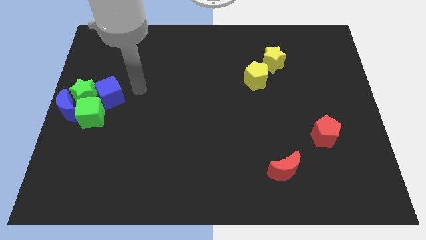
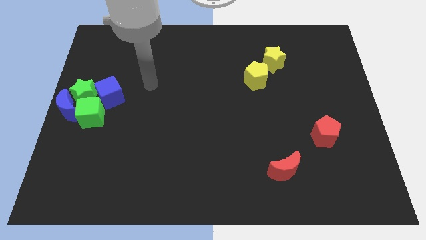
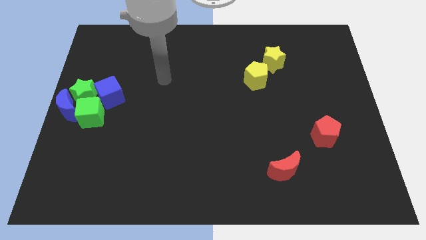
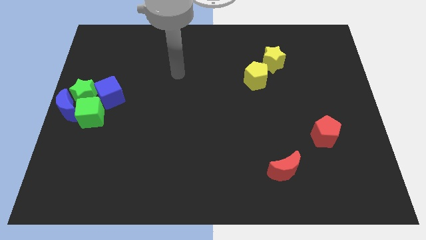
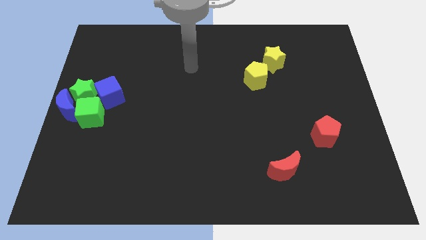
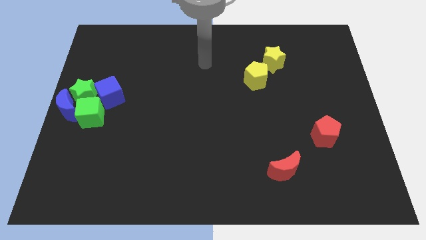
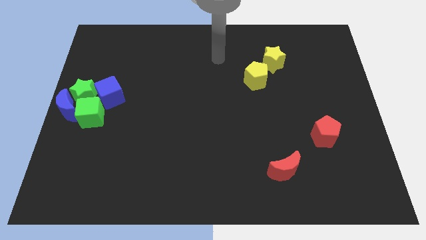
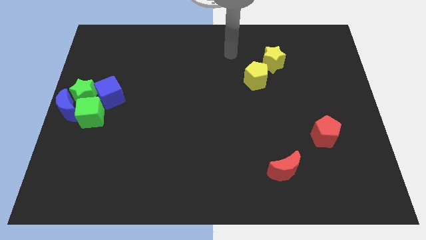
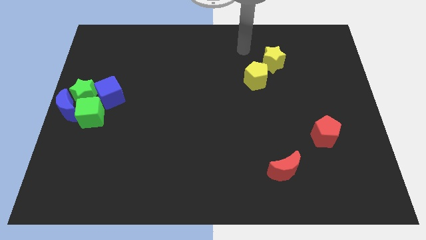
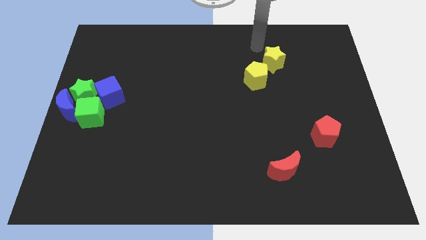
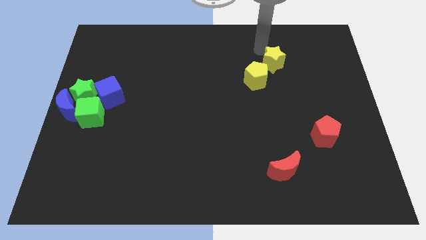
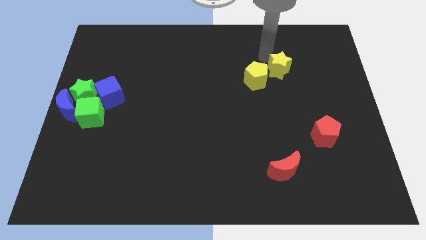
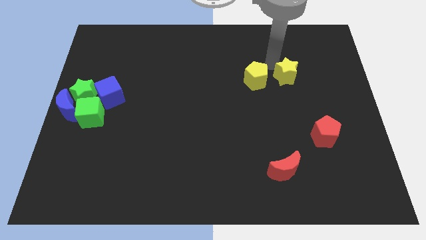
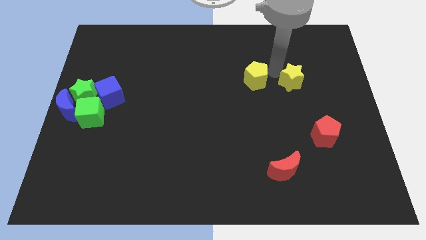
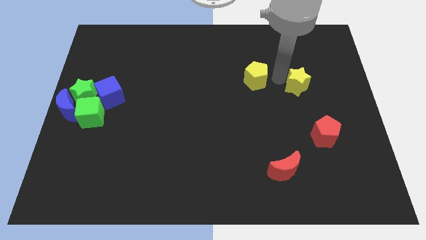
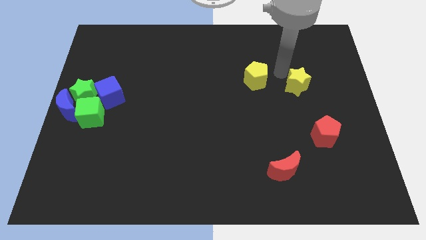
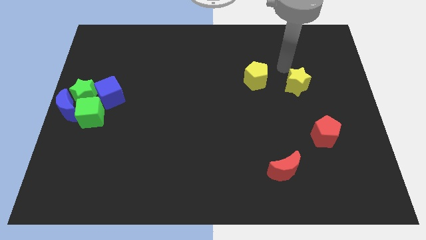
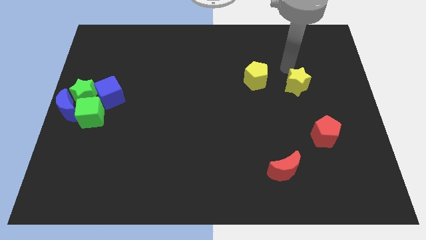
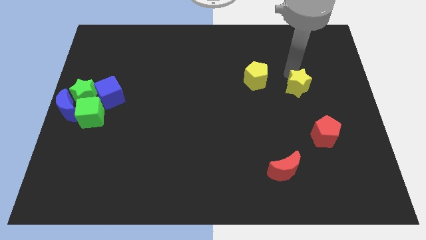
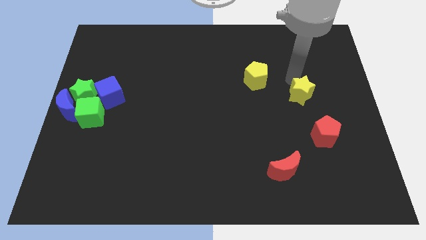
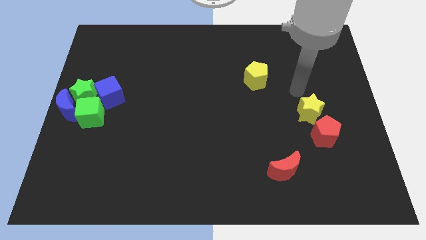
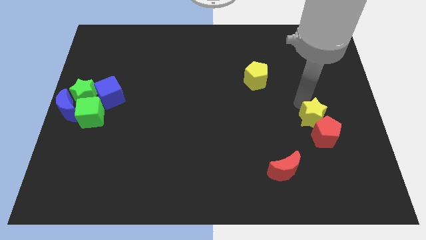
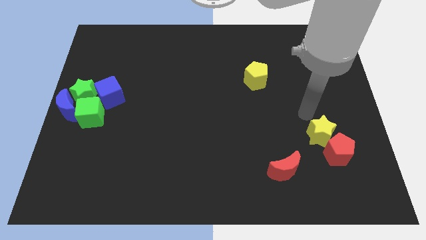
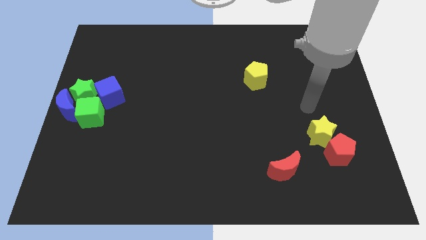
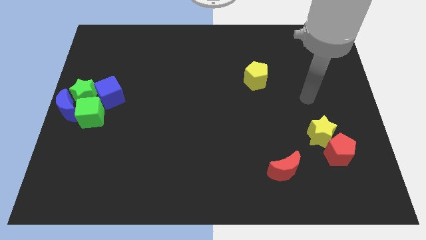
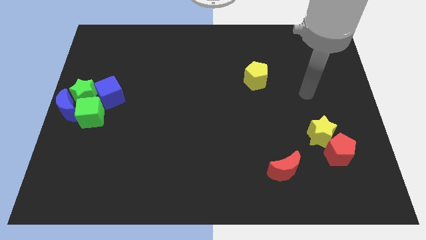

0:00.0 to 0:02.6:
push the yellow star into the top of the red pentagon

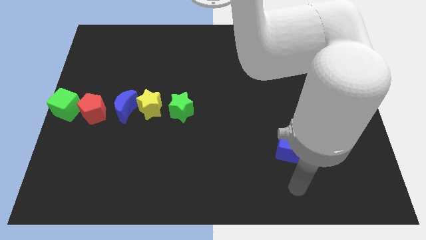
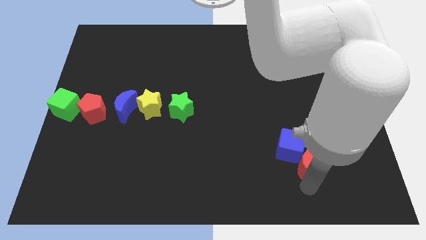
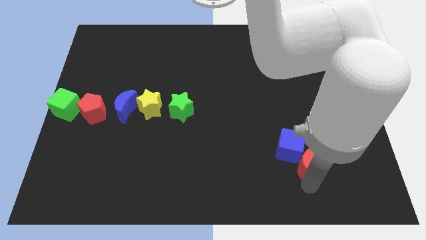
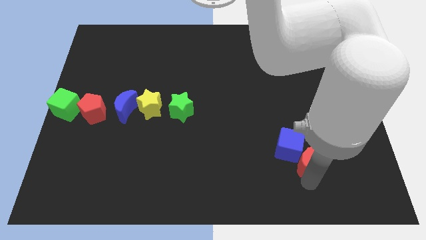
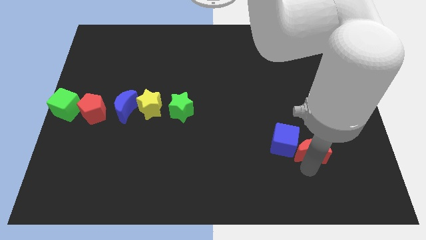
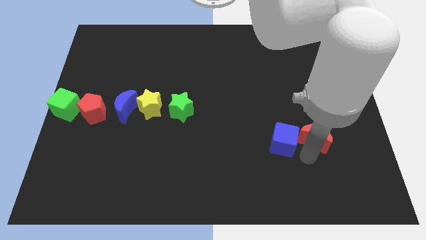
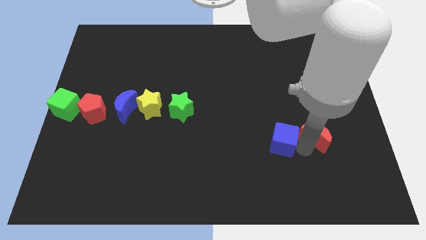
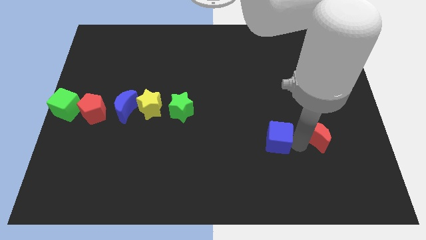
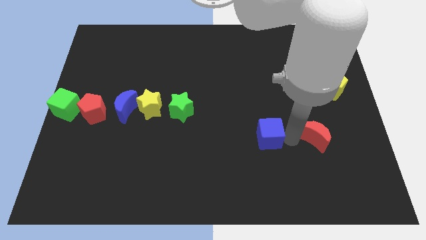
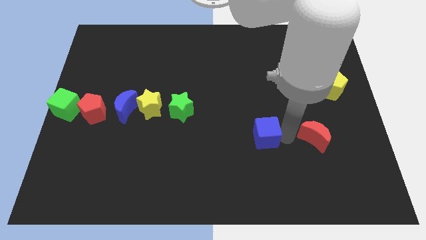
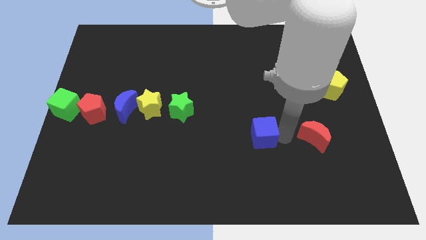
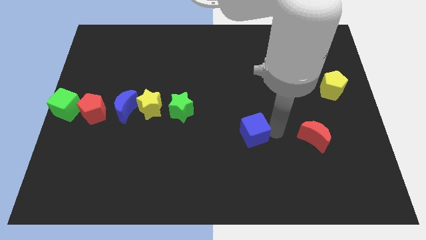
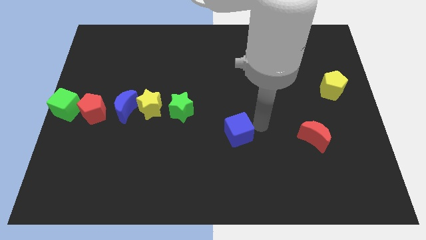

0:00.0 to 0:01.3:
separate blue cube and red moon

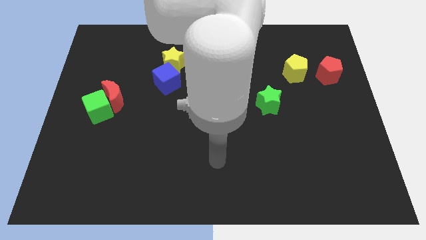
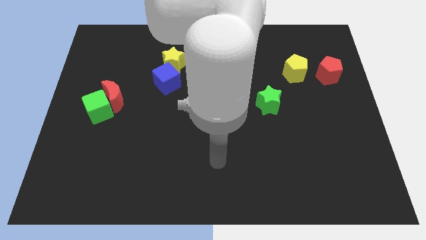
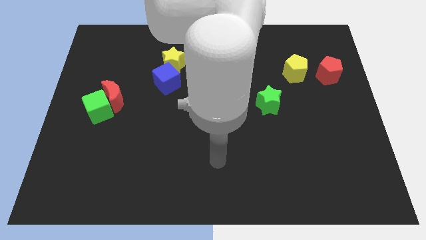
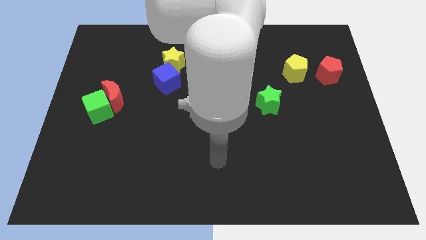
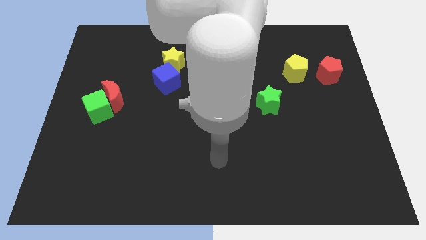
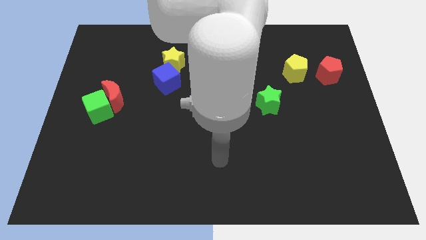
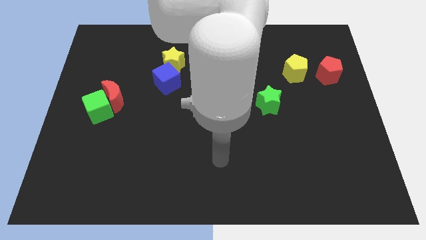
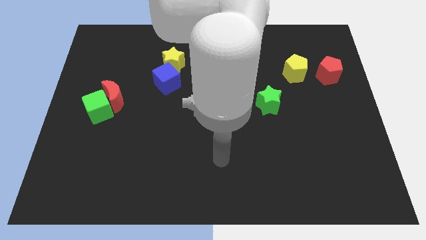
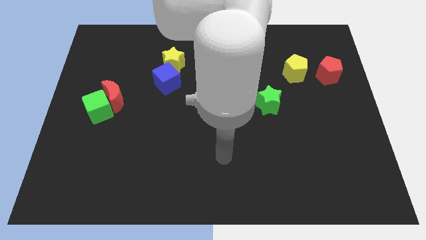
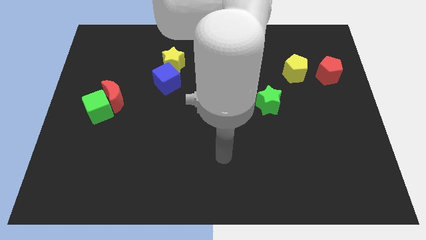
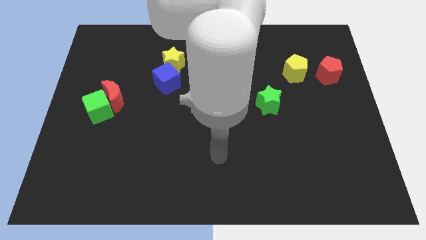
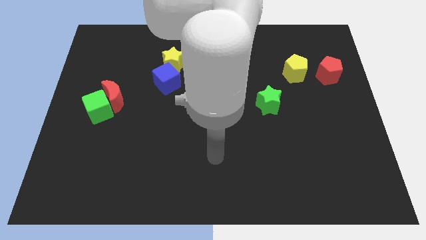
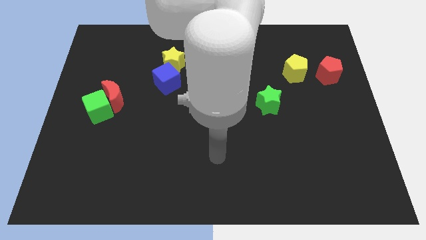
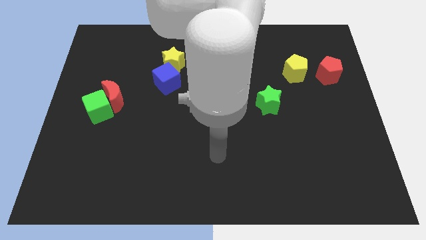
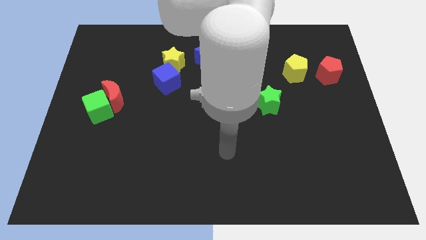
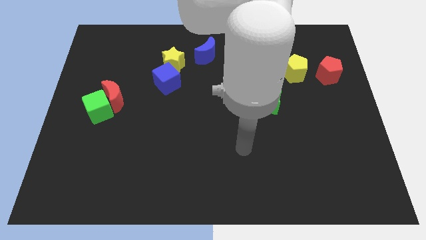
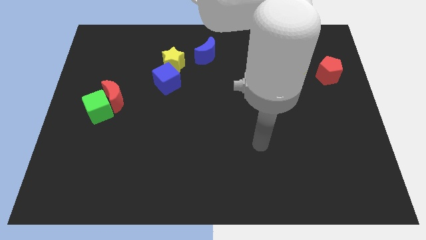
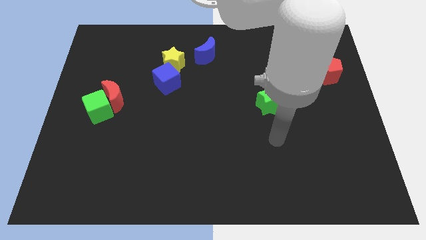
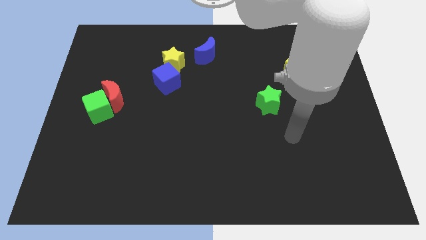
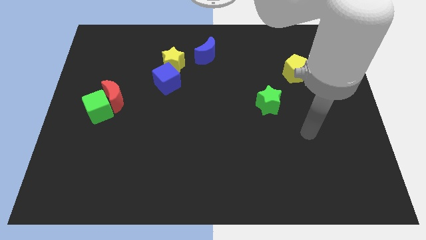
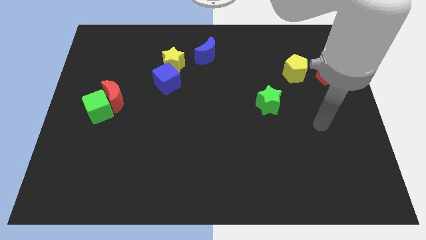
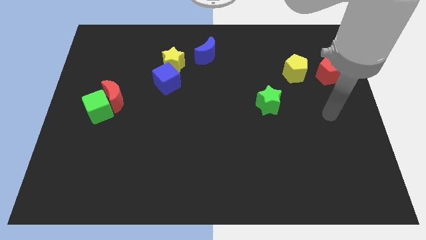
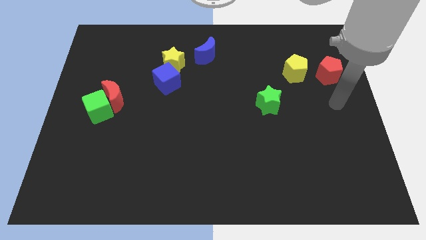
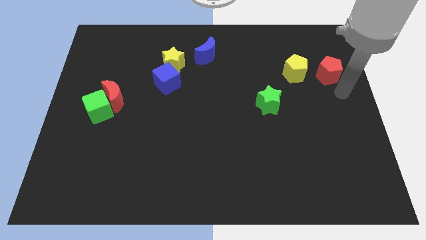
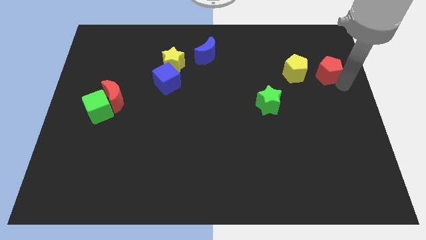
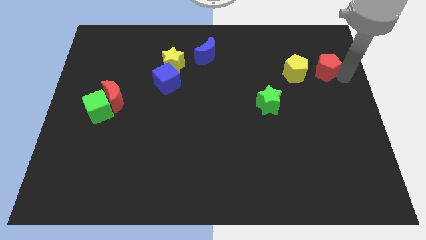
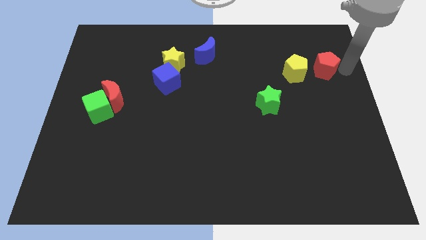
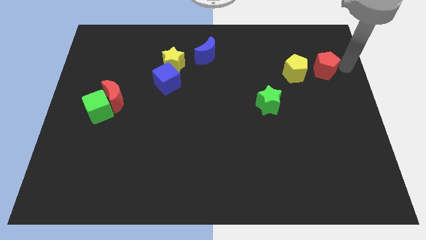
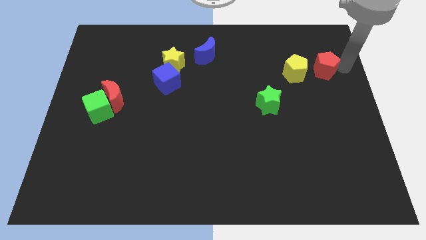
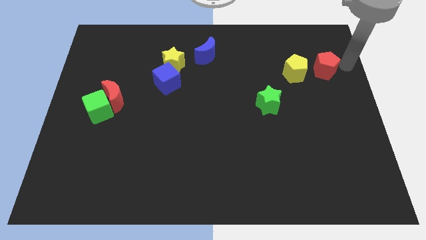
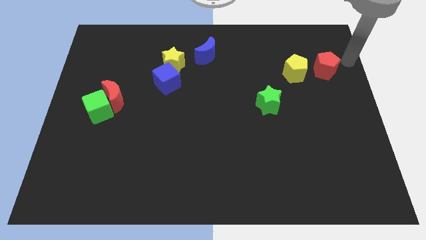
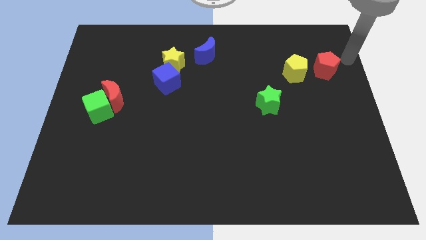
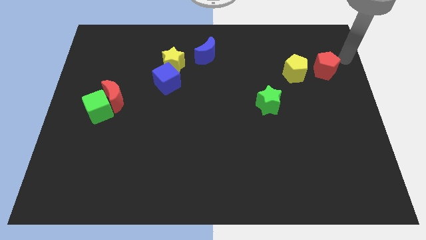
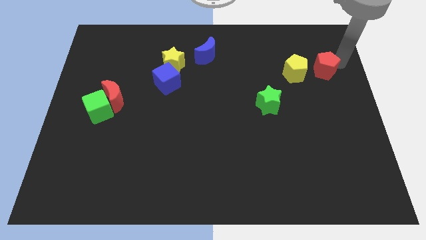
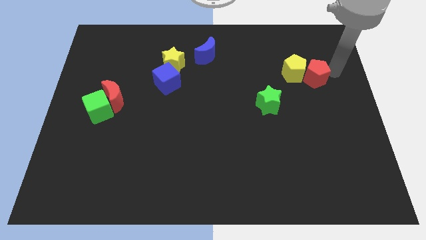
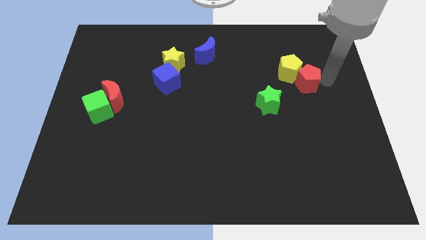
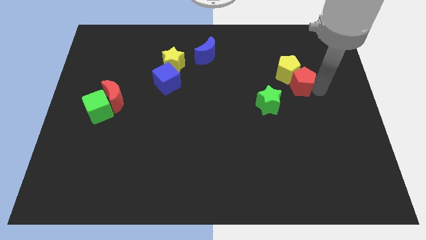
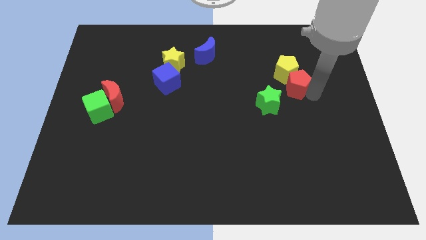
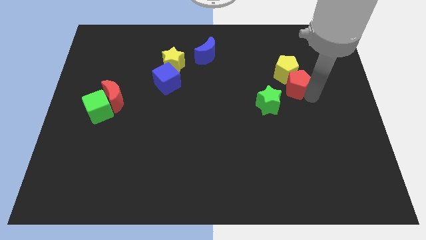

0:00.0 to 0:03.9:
push the red pentagon into the yellow pentagon

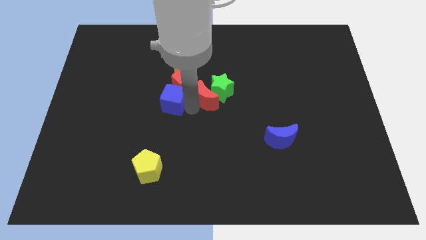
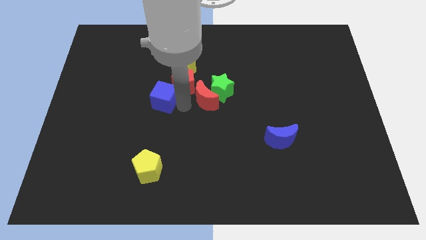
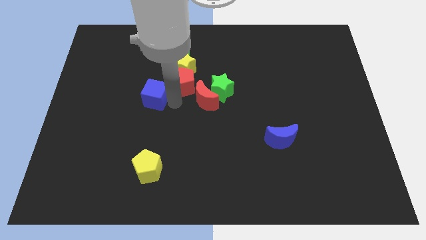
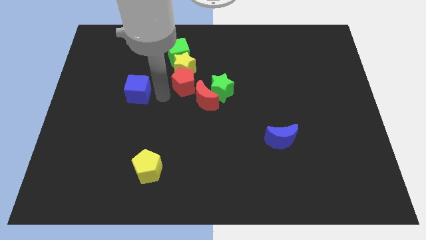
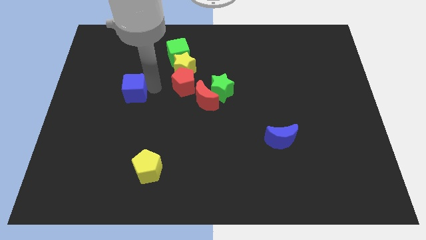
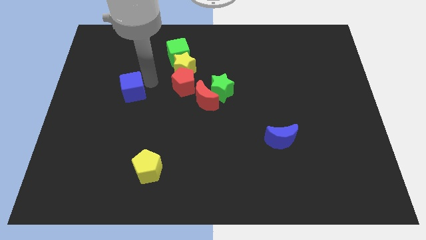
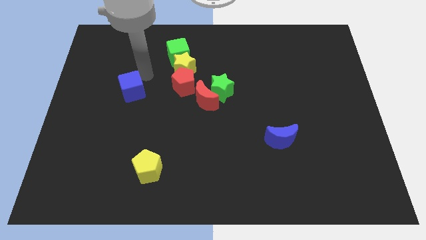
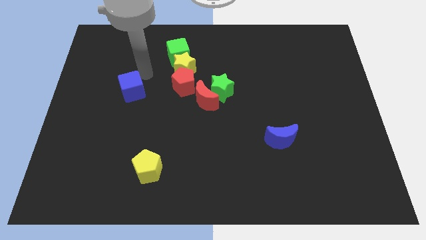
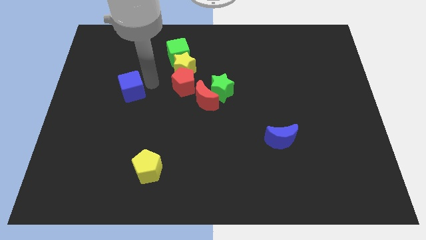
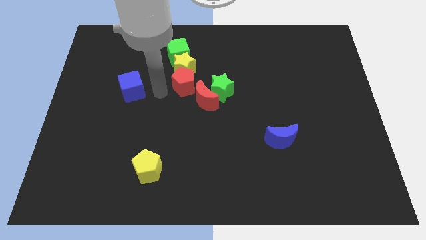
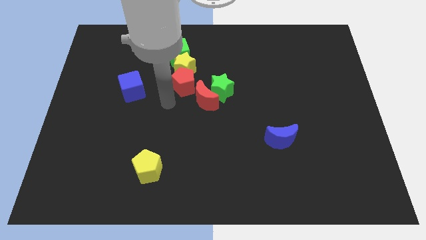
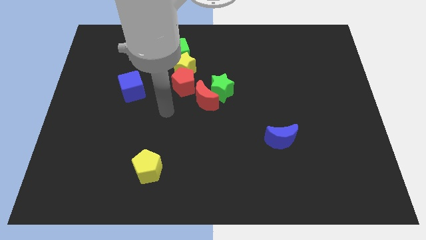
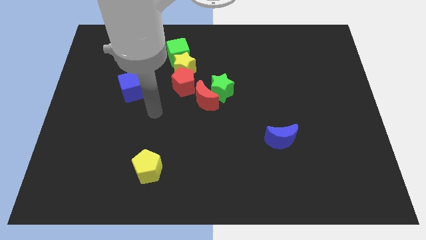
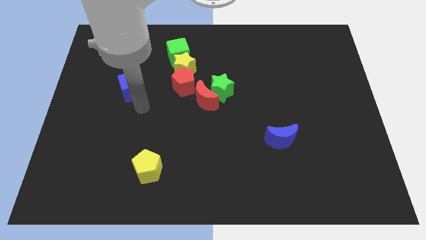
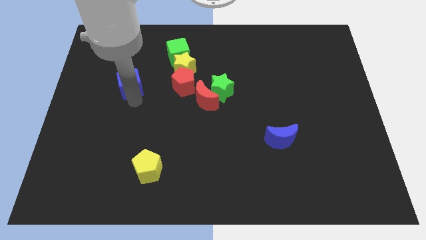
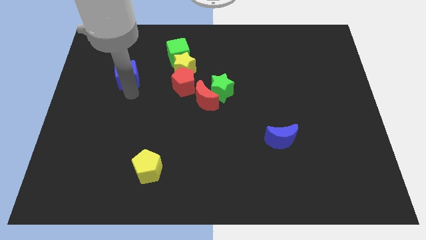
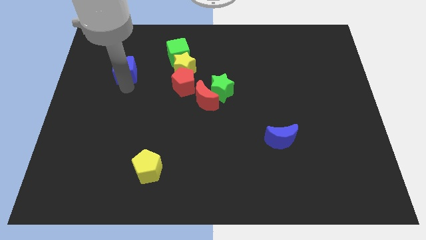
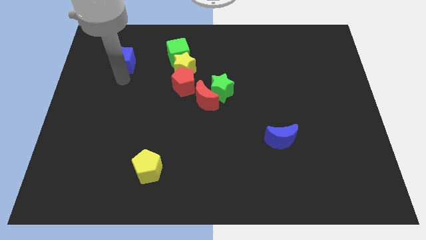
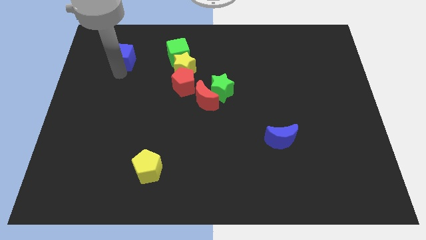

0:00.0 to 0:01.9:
separate the blue cube from the red pentagon
